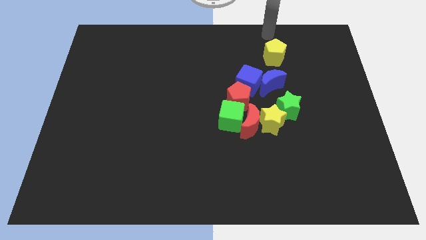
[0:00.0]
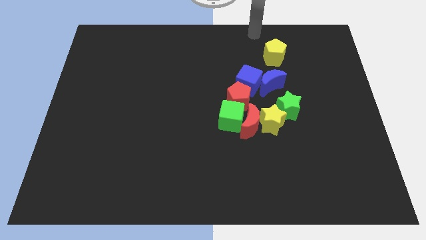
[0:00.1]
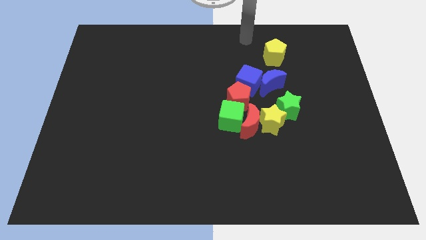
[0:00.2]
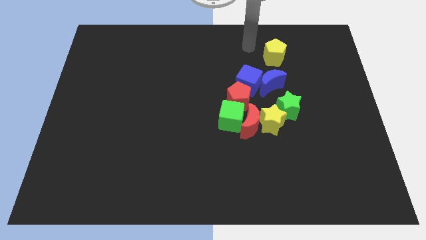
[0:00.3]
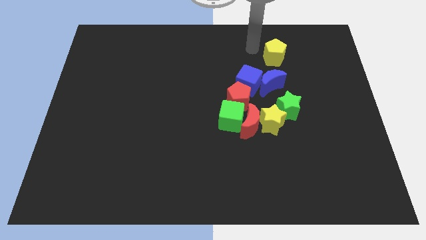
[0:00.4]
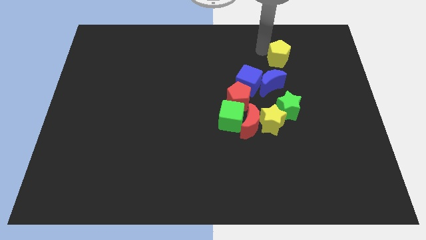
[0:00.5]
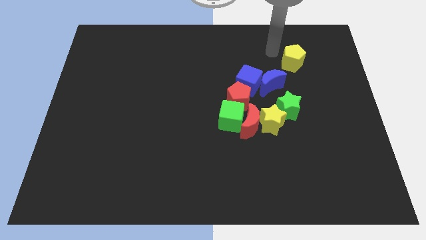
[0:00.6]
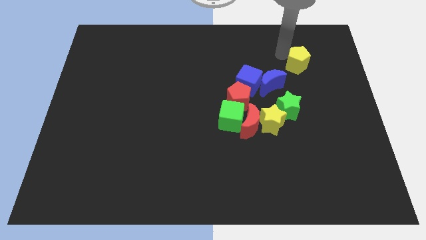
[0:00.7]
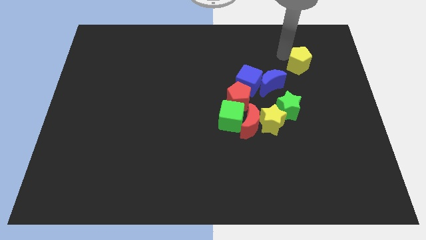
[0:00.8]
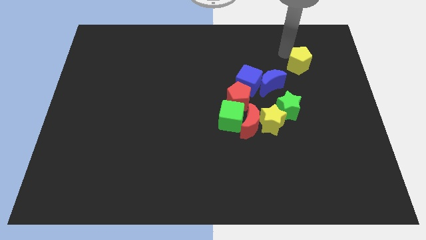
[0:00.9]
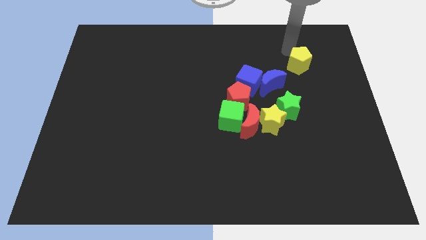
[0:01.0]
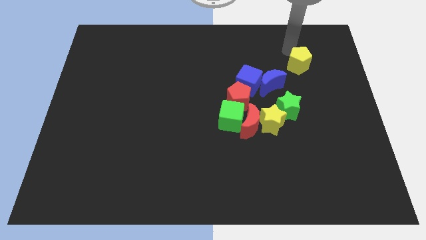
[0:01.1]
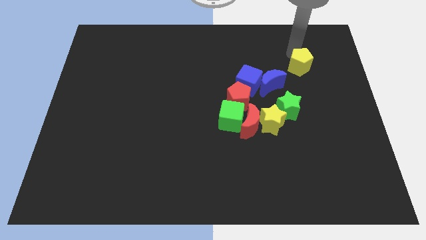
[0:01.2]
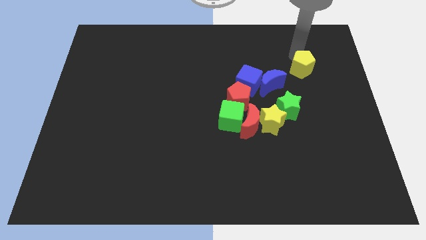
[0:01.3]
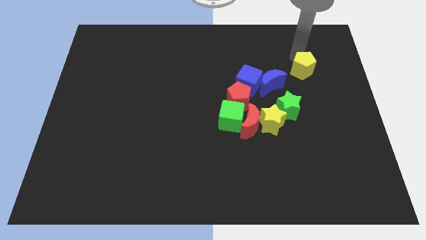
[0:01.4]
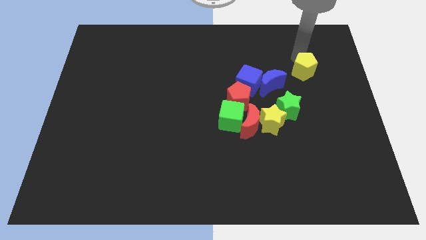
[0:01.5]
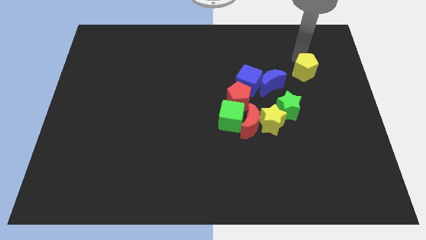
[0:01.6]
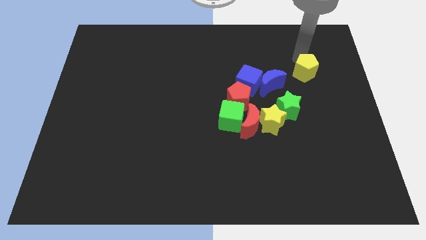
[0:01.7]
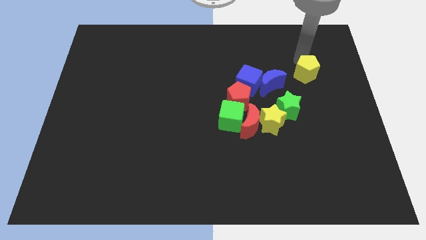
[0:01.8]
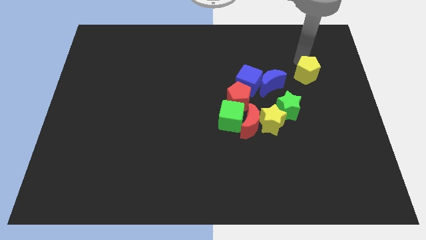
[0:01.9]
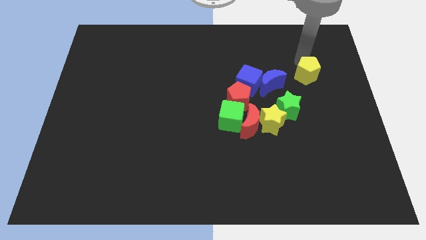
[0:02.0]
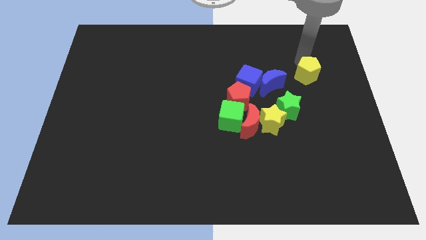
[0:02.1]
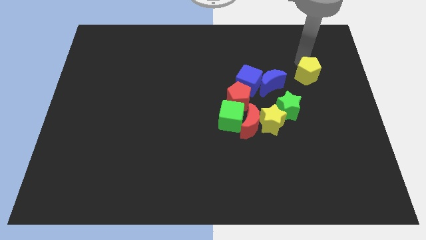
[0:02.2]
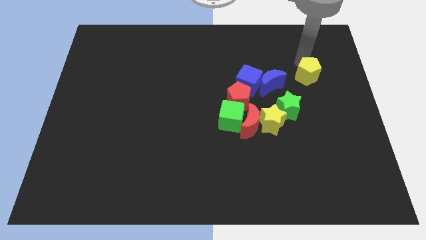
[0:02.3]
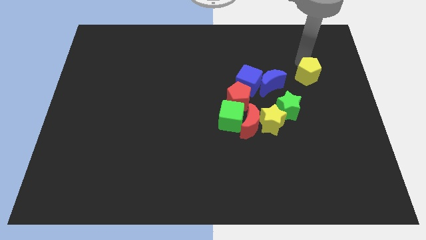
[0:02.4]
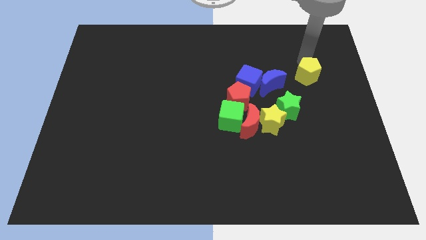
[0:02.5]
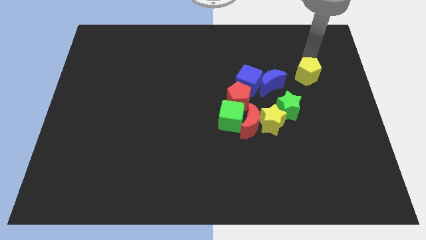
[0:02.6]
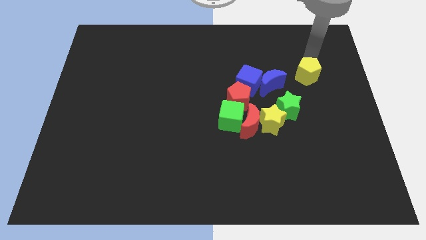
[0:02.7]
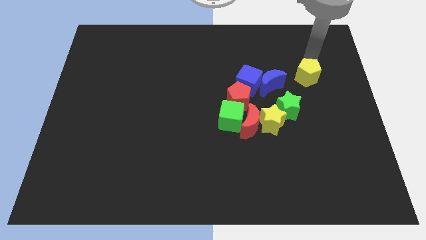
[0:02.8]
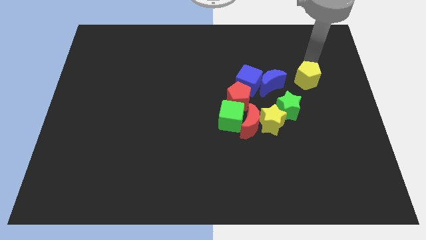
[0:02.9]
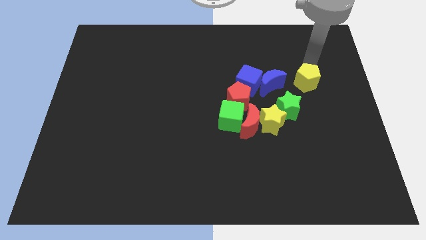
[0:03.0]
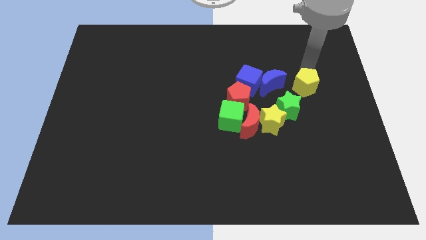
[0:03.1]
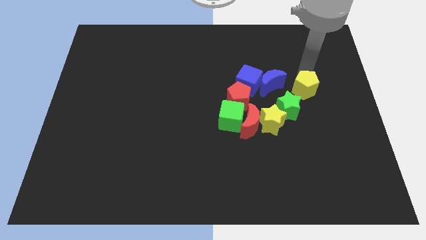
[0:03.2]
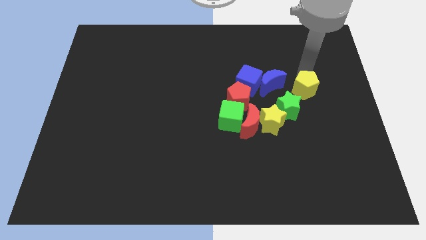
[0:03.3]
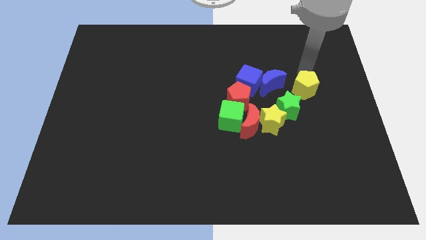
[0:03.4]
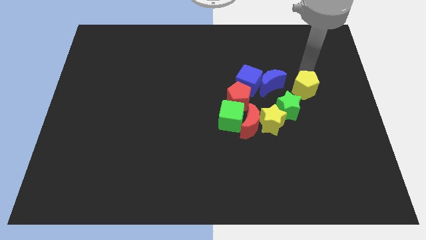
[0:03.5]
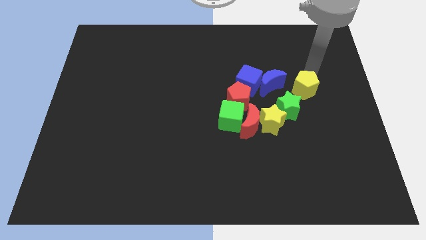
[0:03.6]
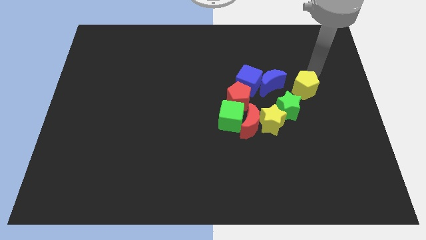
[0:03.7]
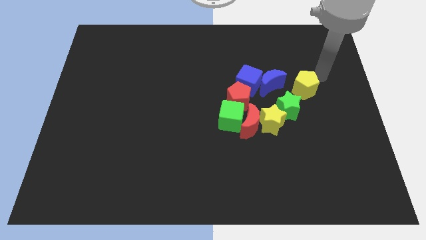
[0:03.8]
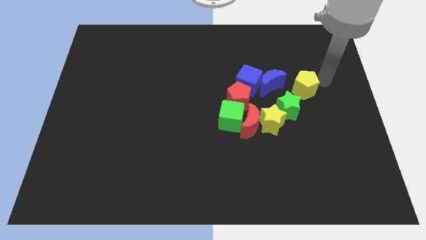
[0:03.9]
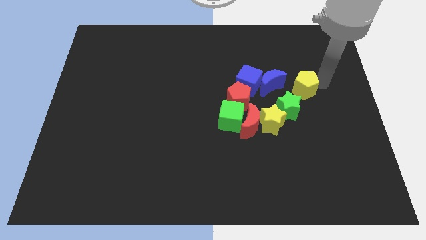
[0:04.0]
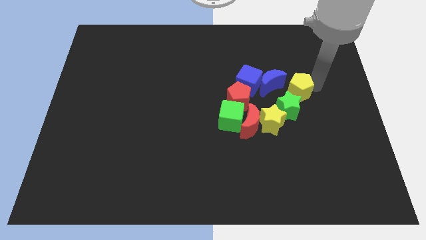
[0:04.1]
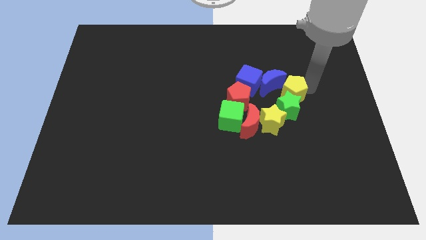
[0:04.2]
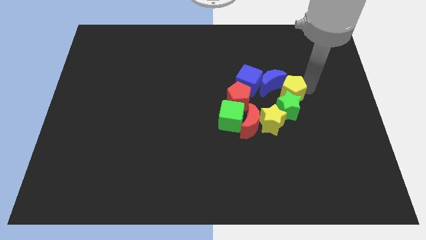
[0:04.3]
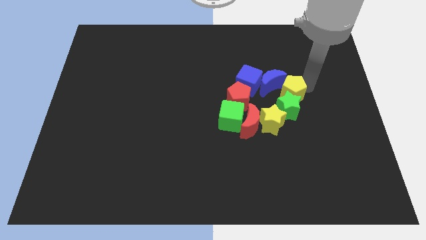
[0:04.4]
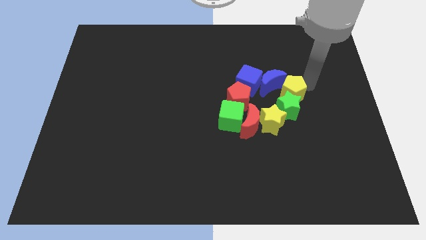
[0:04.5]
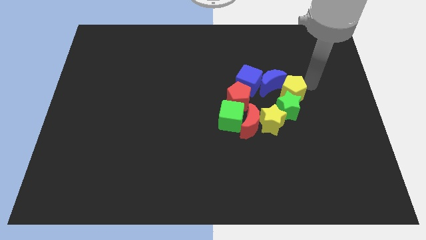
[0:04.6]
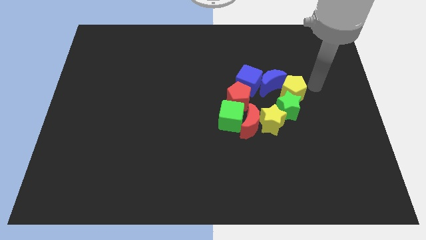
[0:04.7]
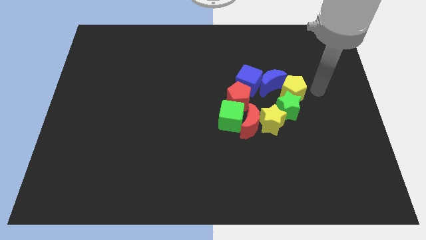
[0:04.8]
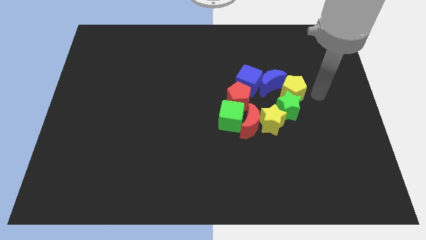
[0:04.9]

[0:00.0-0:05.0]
push the yellow pentagon into the blue crescent and green star

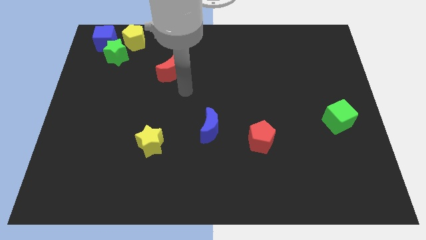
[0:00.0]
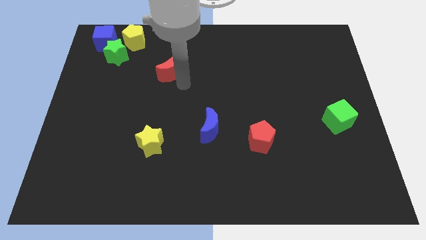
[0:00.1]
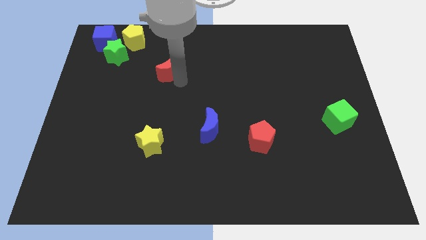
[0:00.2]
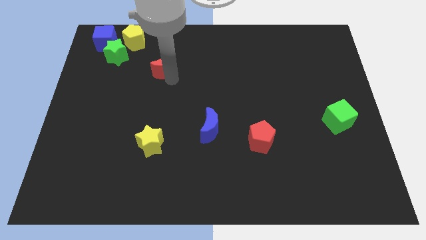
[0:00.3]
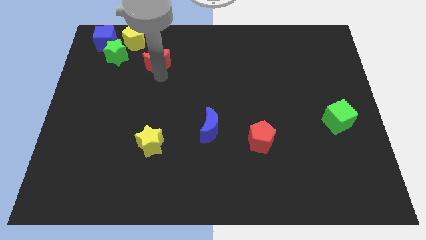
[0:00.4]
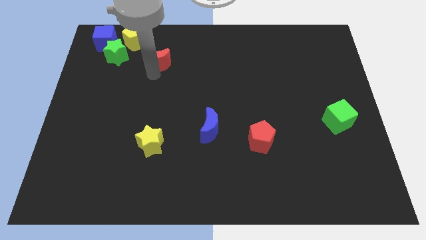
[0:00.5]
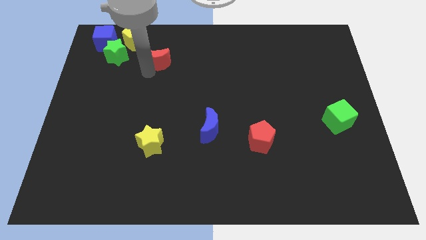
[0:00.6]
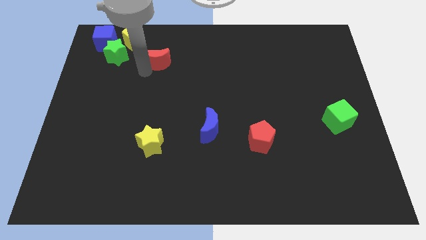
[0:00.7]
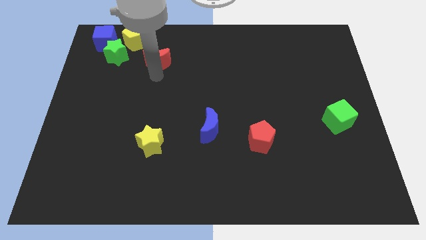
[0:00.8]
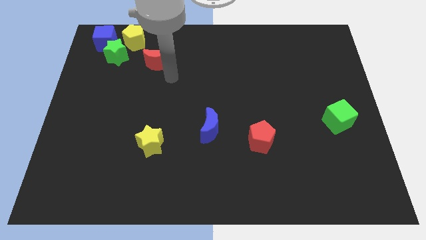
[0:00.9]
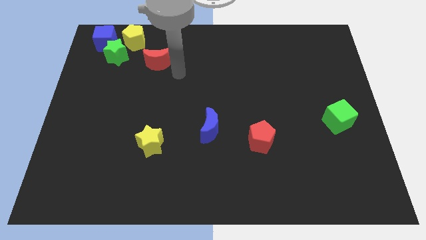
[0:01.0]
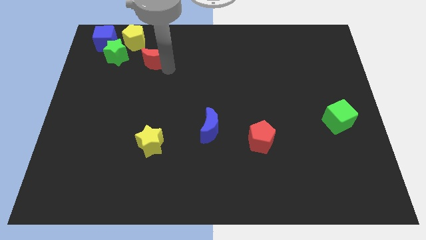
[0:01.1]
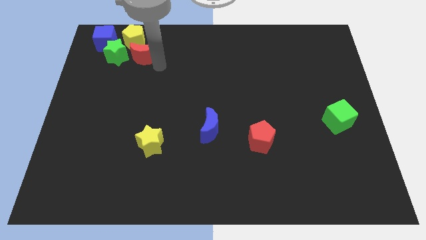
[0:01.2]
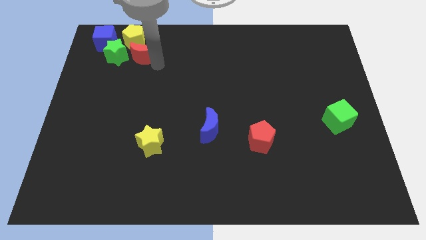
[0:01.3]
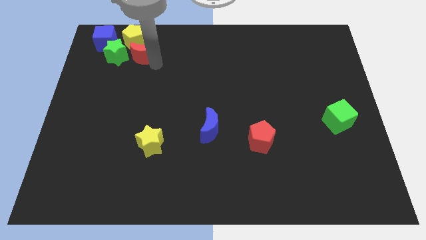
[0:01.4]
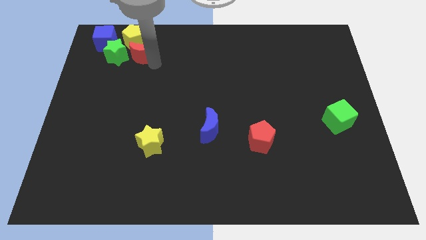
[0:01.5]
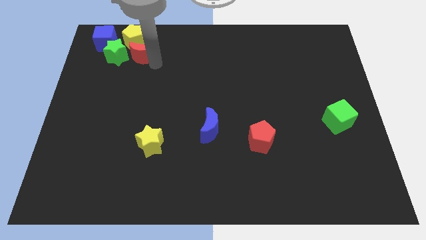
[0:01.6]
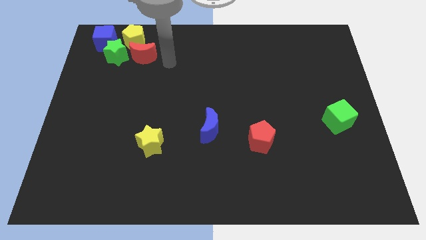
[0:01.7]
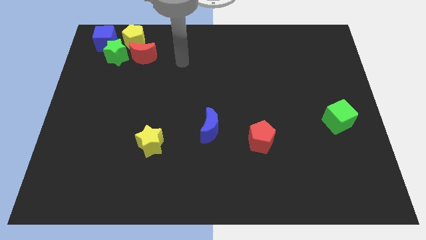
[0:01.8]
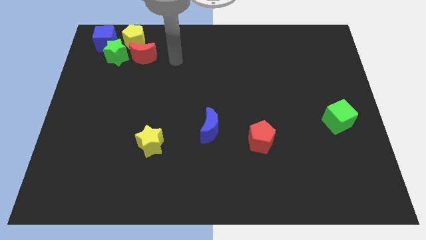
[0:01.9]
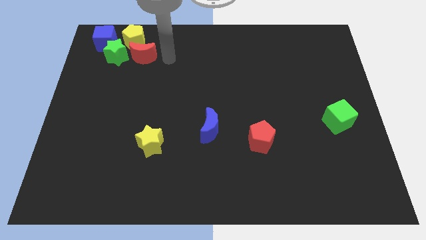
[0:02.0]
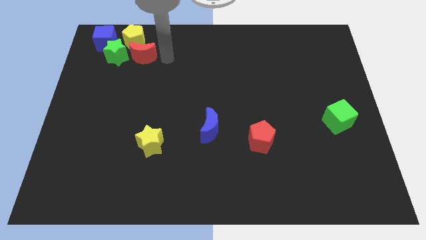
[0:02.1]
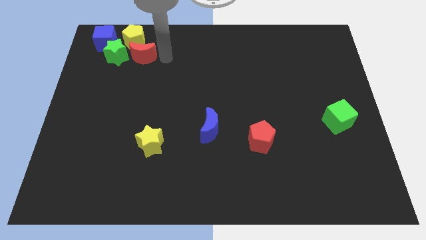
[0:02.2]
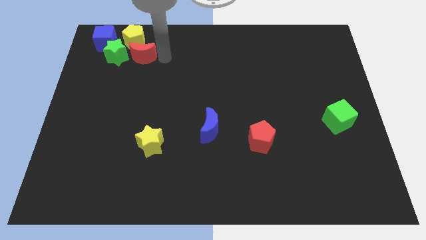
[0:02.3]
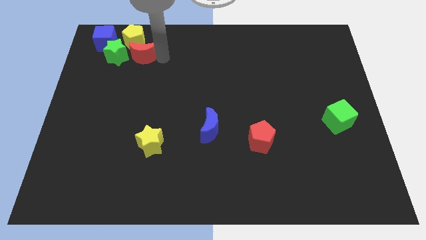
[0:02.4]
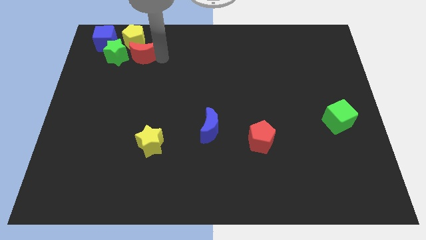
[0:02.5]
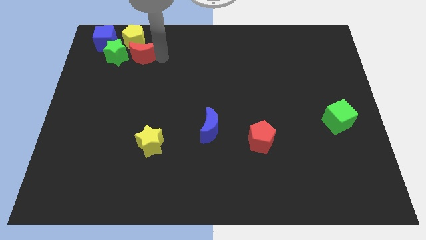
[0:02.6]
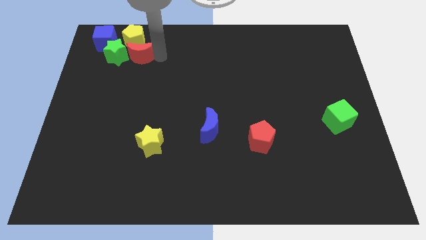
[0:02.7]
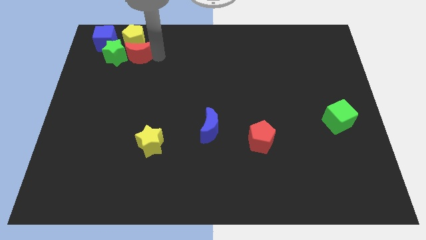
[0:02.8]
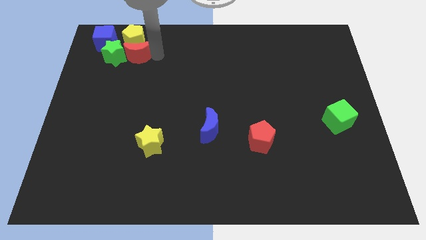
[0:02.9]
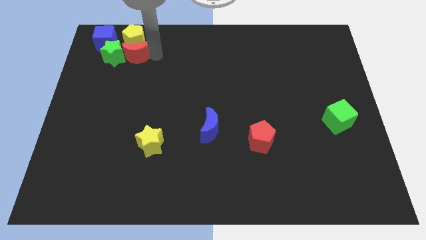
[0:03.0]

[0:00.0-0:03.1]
move the red moon into the green star

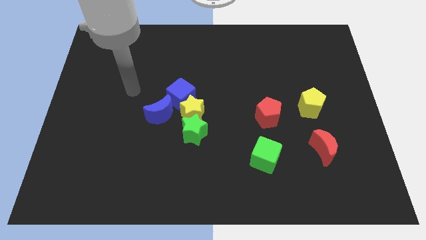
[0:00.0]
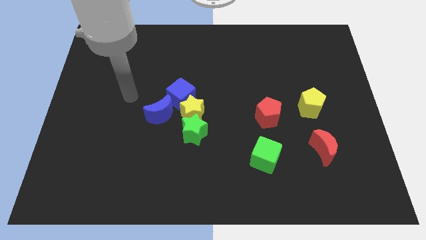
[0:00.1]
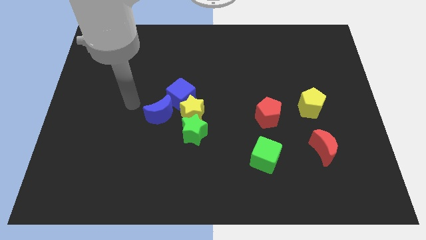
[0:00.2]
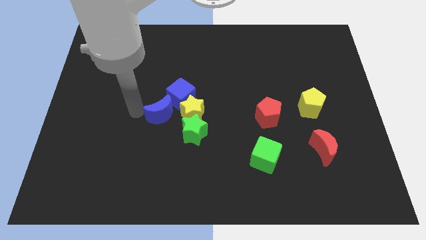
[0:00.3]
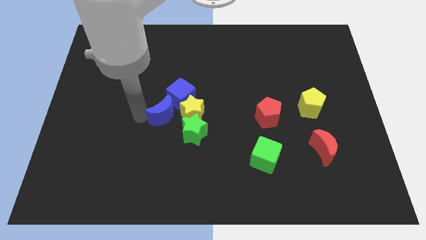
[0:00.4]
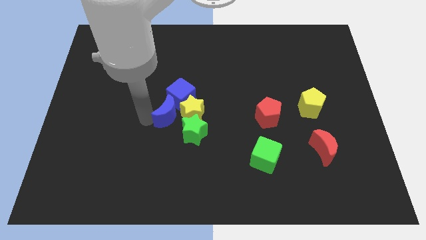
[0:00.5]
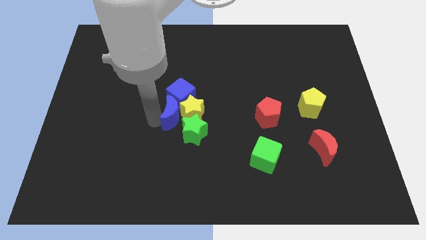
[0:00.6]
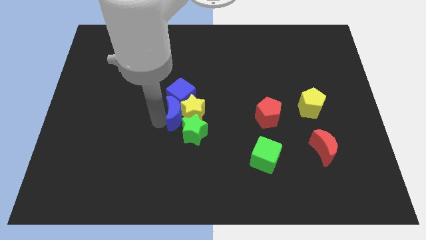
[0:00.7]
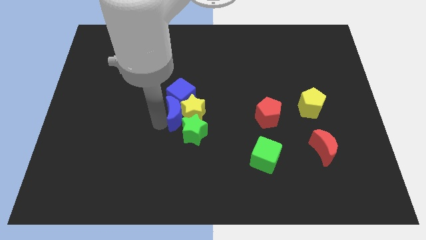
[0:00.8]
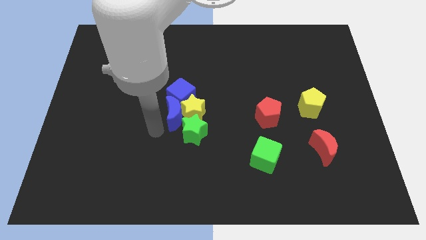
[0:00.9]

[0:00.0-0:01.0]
move blue moon below the blue cube
